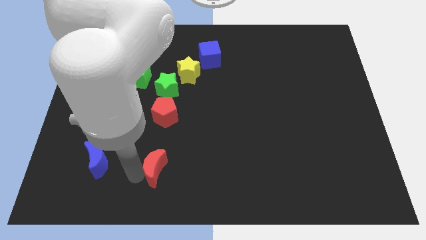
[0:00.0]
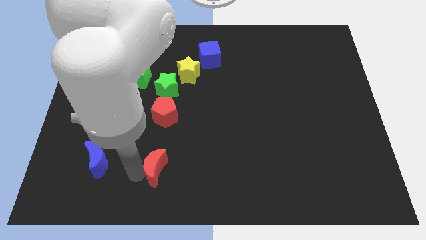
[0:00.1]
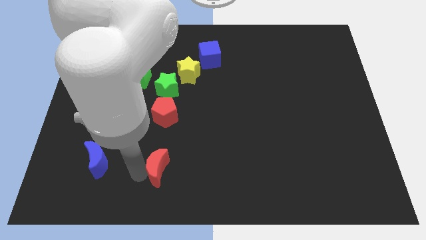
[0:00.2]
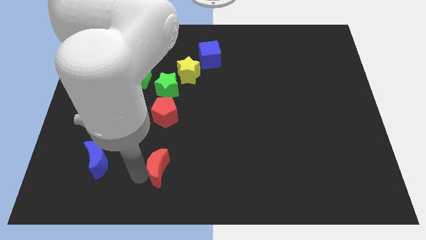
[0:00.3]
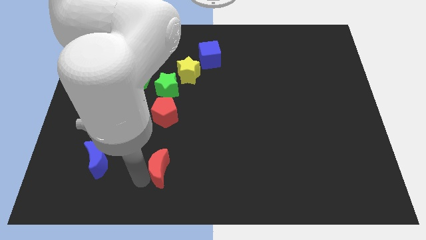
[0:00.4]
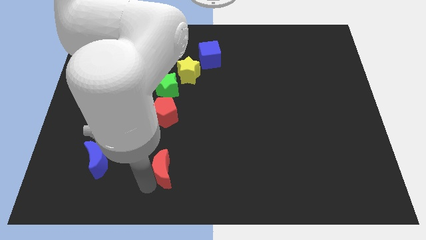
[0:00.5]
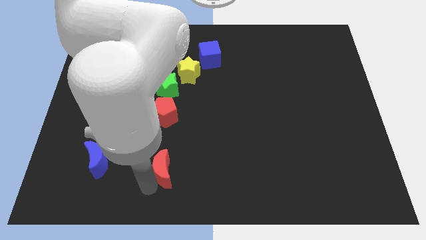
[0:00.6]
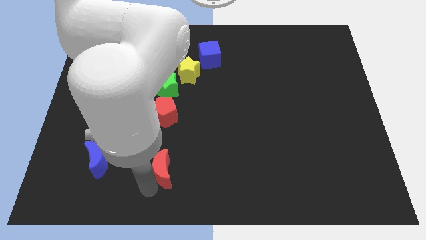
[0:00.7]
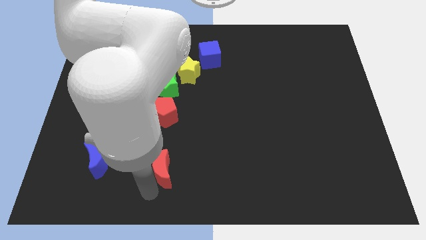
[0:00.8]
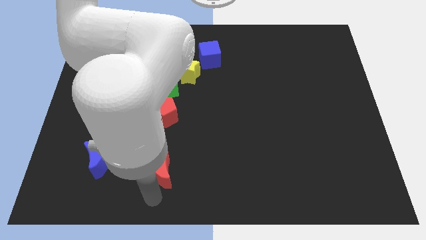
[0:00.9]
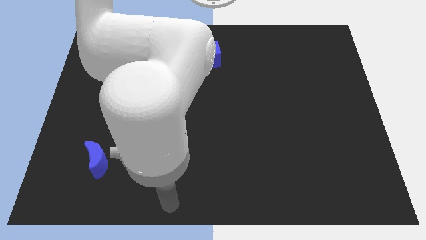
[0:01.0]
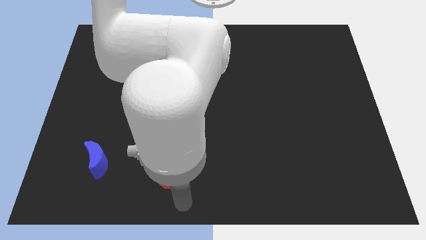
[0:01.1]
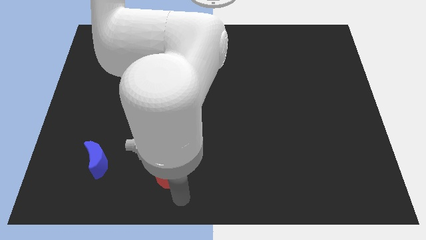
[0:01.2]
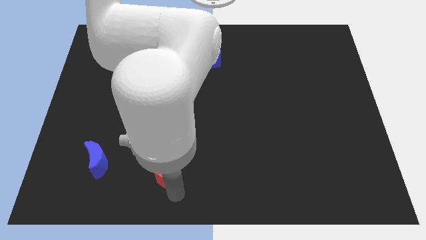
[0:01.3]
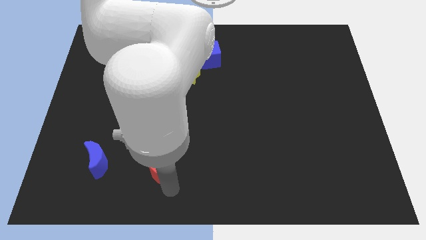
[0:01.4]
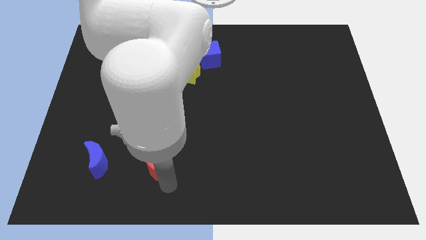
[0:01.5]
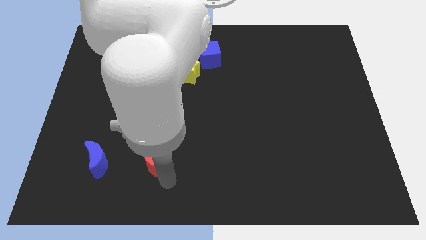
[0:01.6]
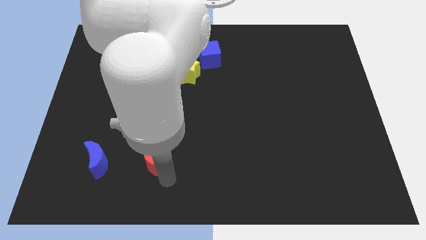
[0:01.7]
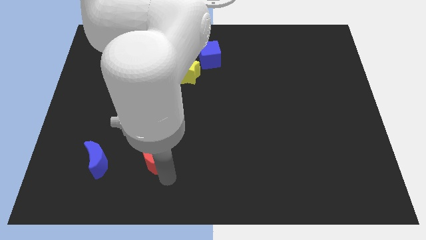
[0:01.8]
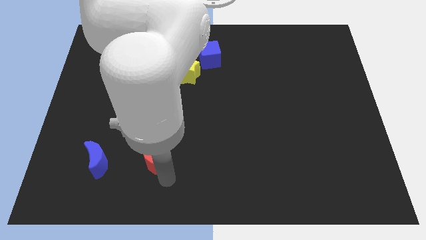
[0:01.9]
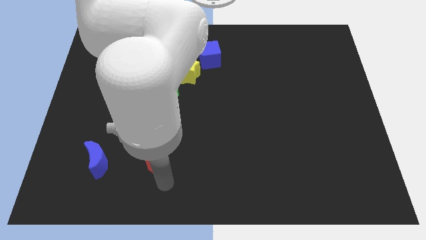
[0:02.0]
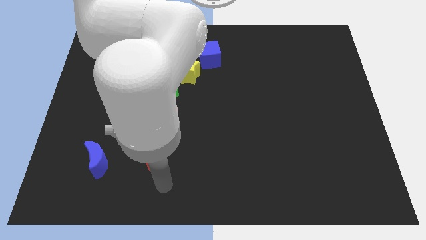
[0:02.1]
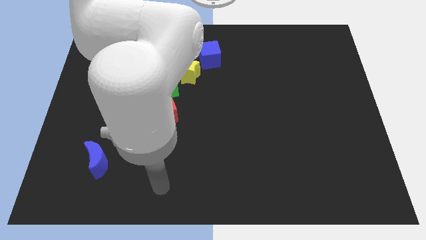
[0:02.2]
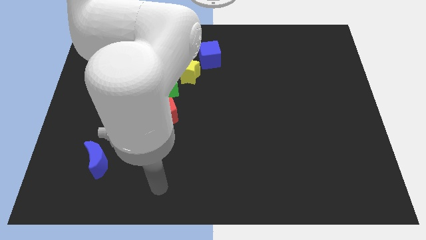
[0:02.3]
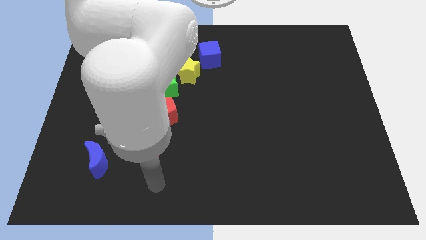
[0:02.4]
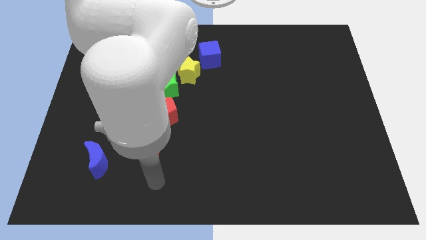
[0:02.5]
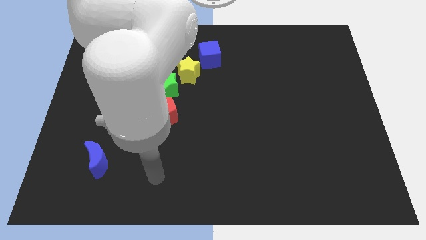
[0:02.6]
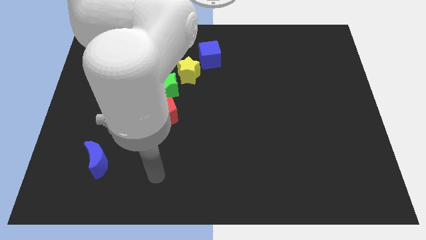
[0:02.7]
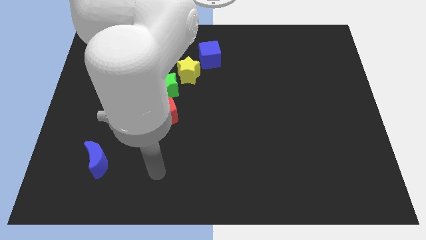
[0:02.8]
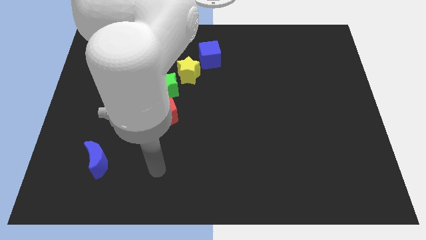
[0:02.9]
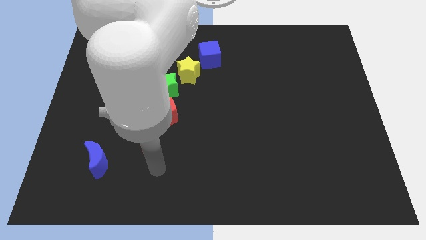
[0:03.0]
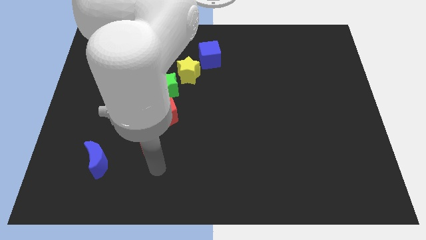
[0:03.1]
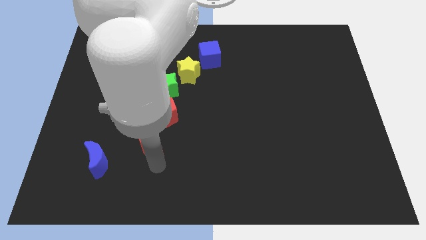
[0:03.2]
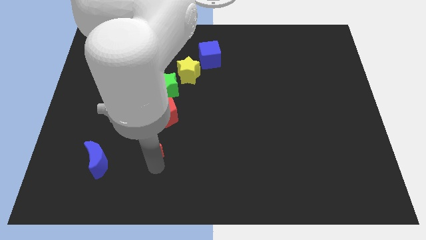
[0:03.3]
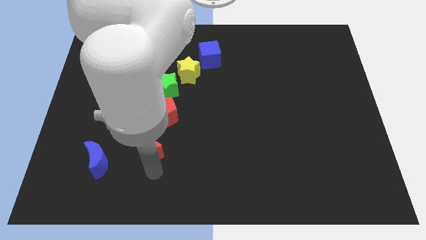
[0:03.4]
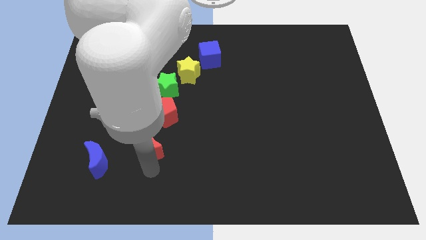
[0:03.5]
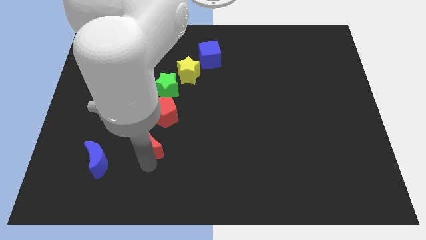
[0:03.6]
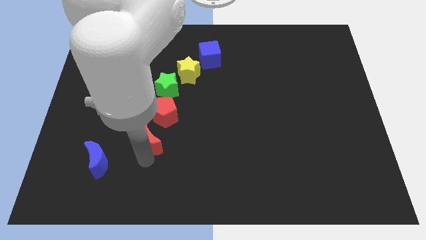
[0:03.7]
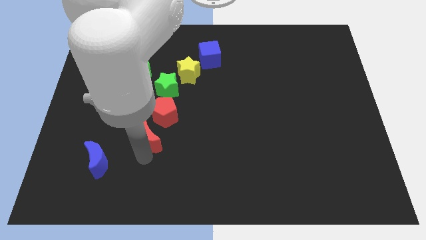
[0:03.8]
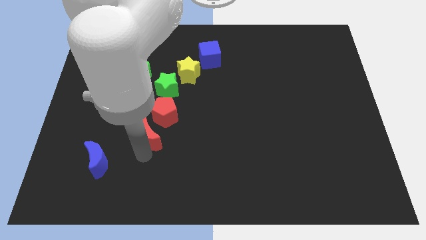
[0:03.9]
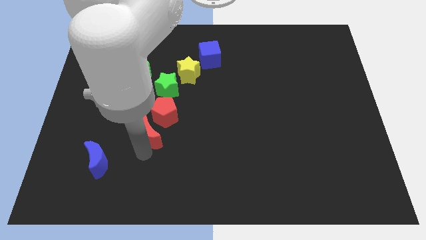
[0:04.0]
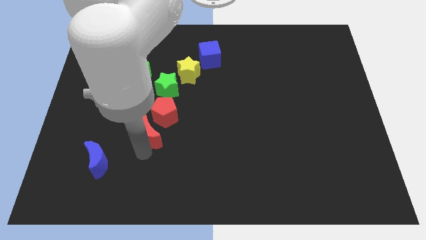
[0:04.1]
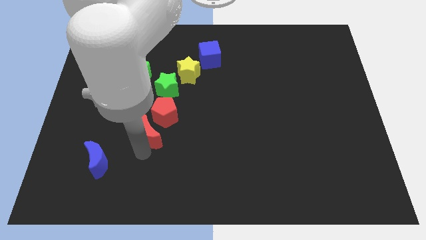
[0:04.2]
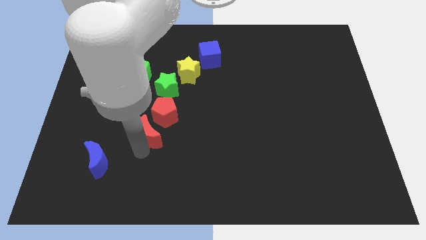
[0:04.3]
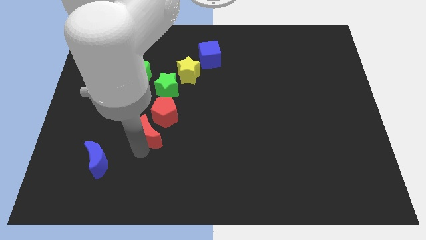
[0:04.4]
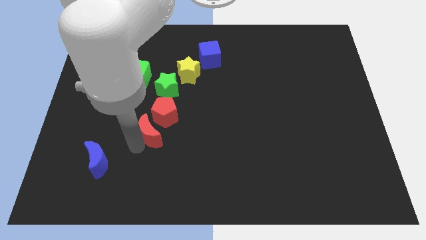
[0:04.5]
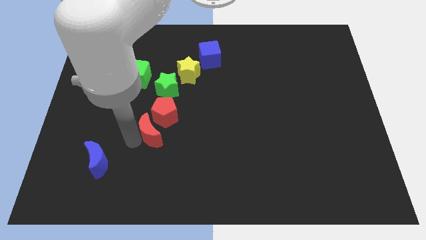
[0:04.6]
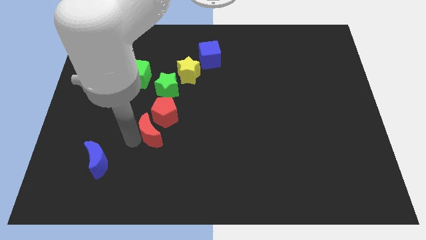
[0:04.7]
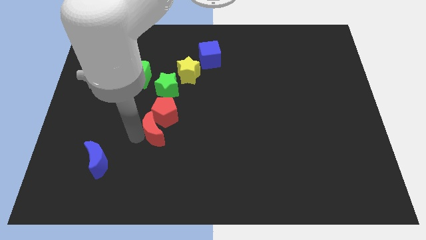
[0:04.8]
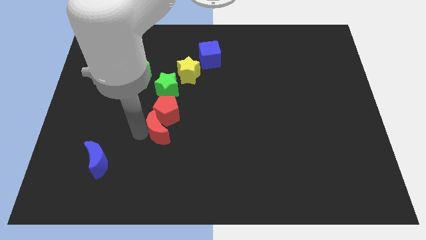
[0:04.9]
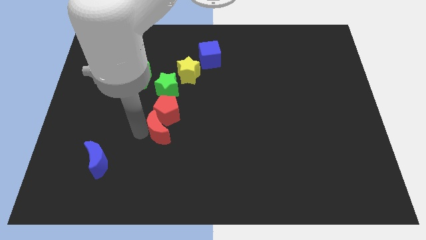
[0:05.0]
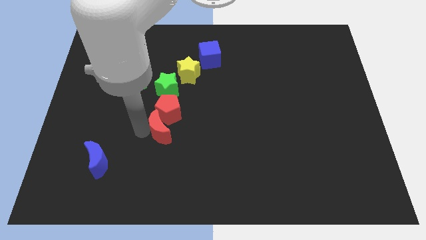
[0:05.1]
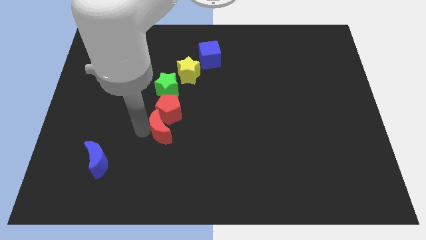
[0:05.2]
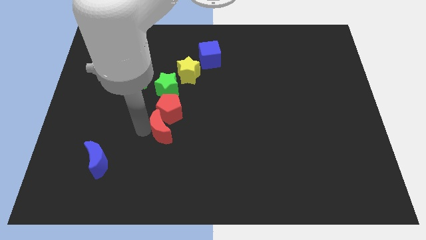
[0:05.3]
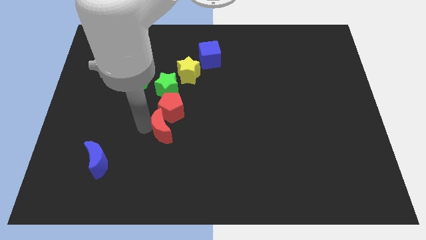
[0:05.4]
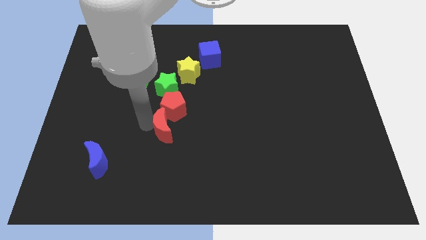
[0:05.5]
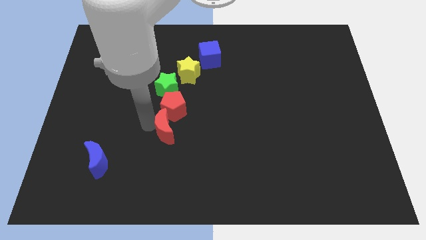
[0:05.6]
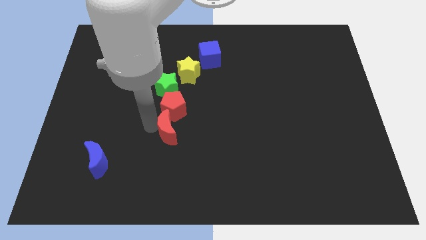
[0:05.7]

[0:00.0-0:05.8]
push the red crescent into the red pentagon

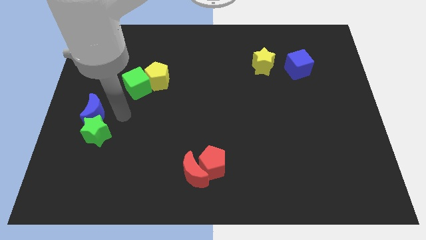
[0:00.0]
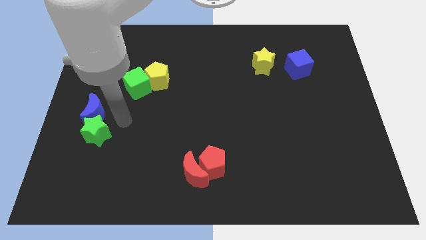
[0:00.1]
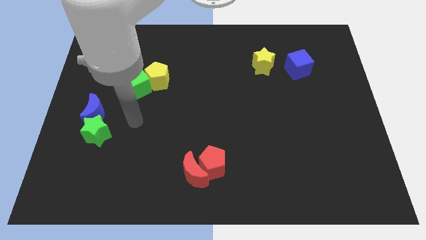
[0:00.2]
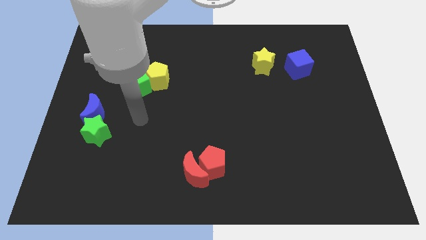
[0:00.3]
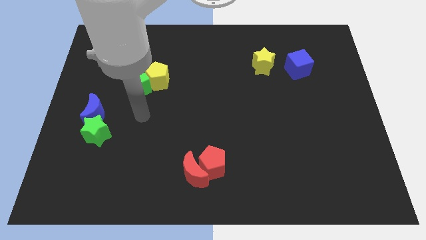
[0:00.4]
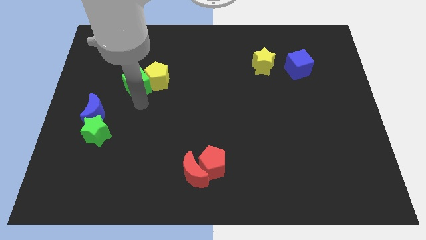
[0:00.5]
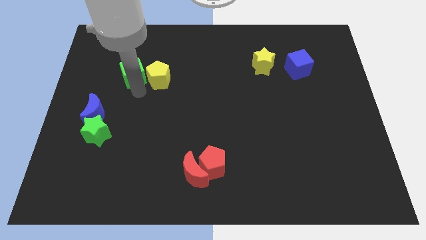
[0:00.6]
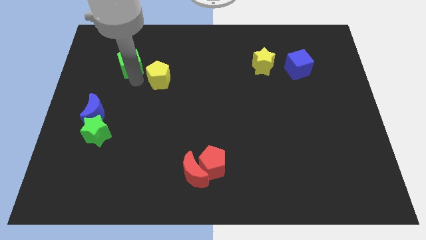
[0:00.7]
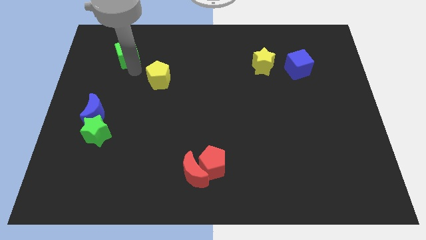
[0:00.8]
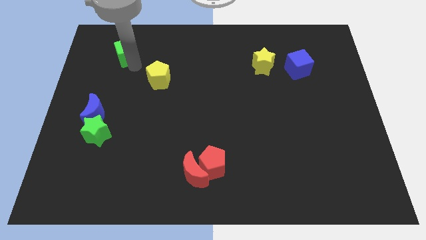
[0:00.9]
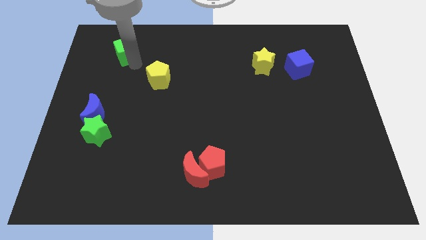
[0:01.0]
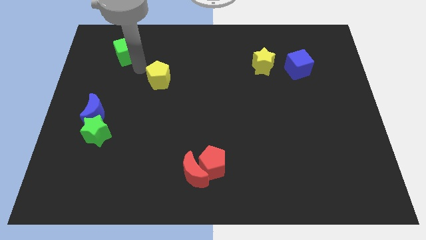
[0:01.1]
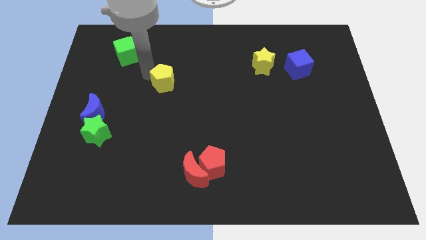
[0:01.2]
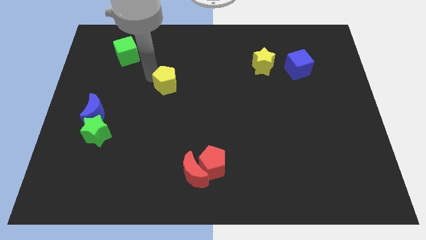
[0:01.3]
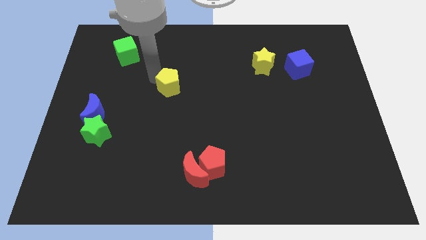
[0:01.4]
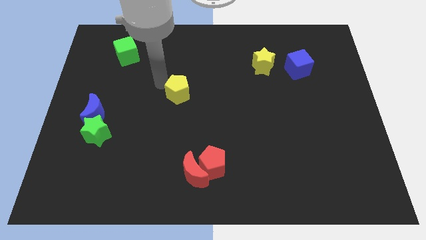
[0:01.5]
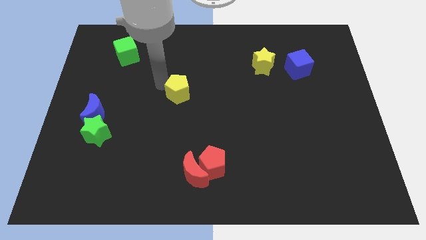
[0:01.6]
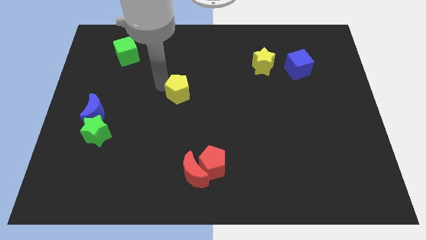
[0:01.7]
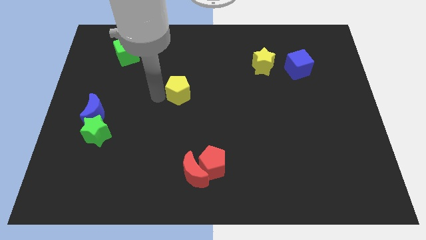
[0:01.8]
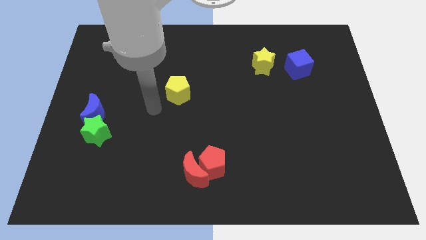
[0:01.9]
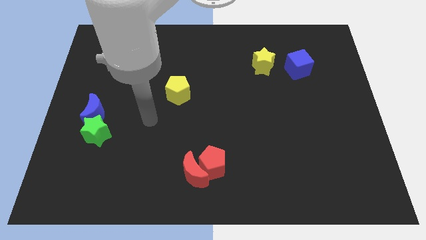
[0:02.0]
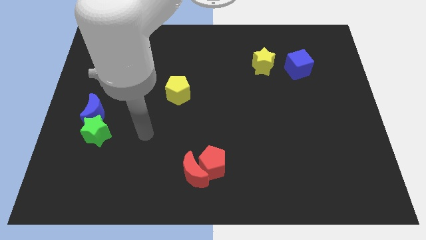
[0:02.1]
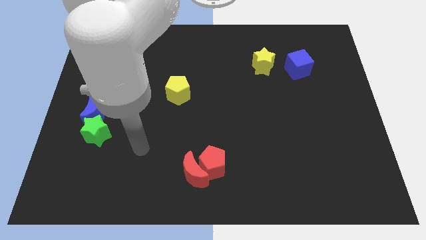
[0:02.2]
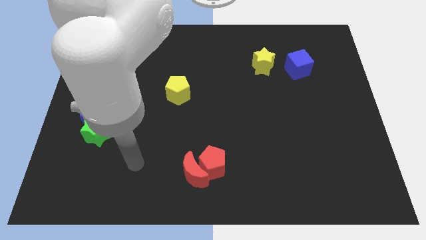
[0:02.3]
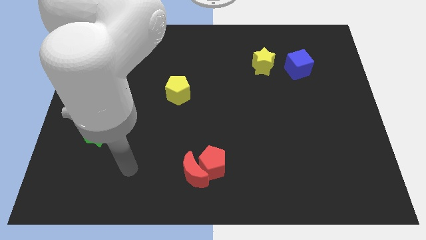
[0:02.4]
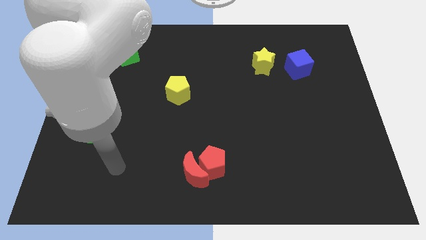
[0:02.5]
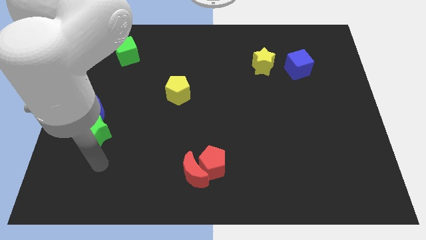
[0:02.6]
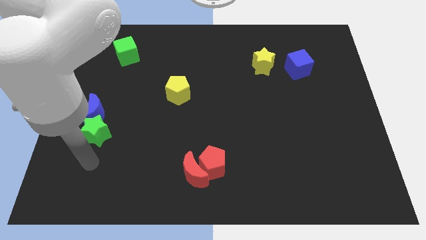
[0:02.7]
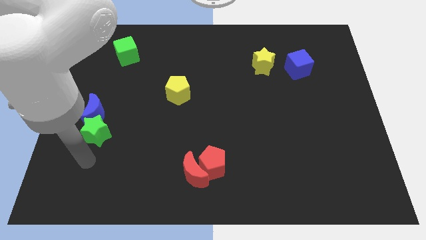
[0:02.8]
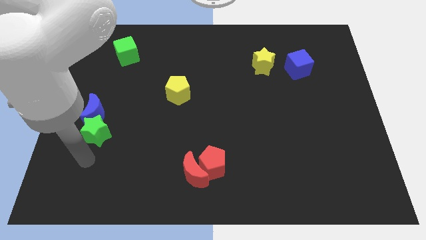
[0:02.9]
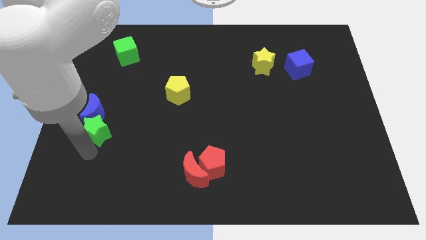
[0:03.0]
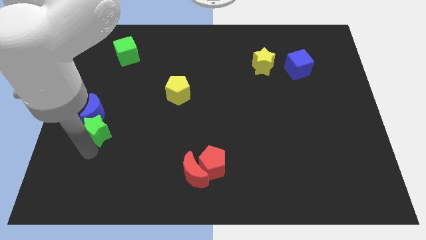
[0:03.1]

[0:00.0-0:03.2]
separate the yellow pentagon from the green cube
